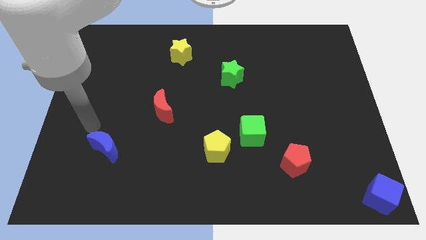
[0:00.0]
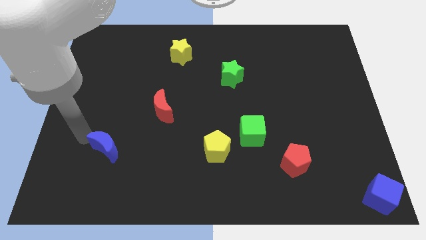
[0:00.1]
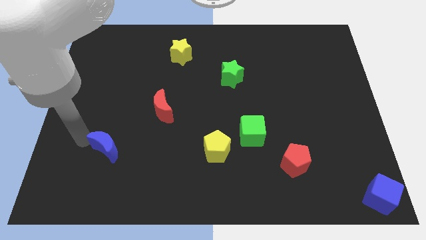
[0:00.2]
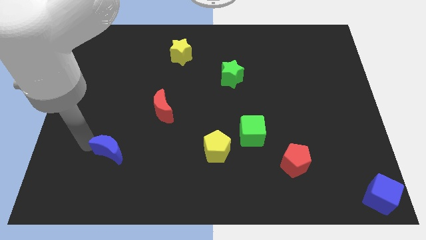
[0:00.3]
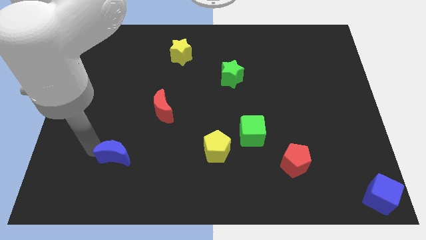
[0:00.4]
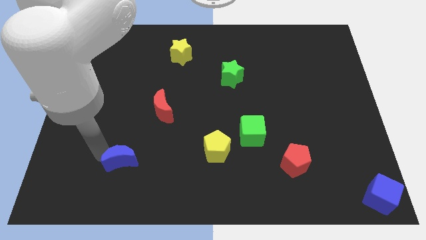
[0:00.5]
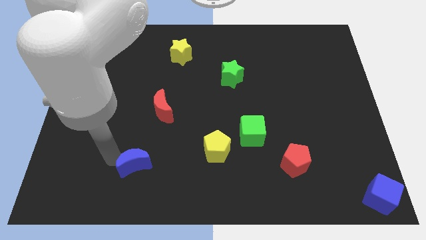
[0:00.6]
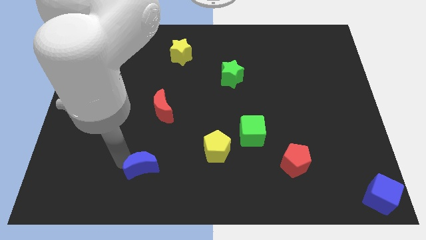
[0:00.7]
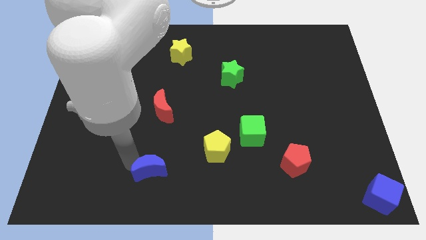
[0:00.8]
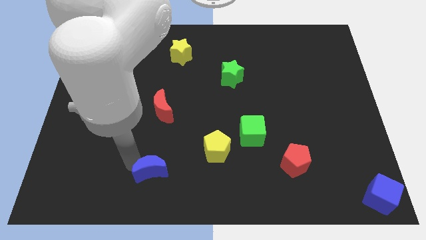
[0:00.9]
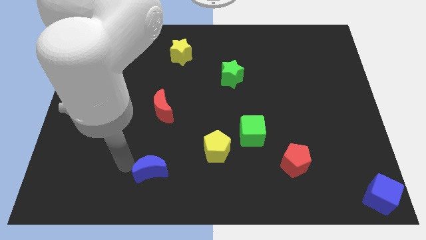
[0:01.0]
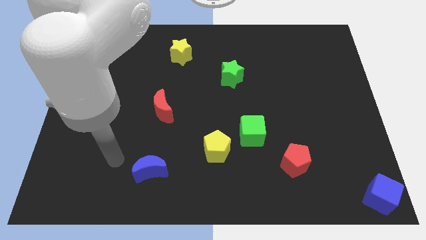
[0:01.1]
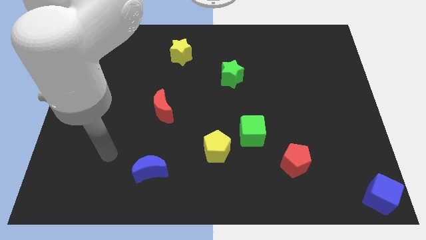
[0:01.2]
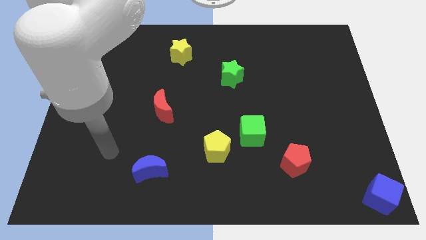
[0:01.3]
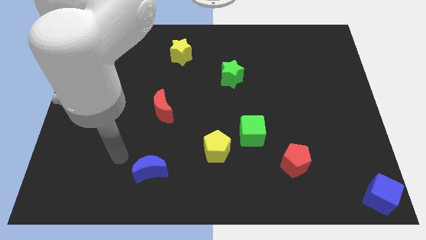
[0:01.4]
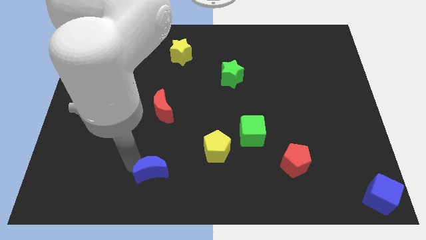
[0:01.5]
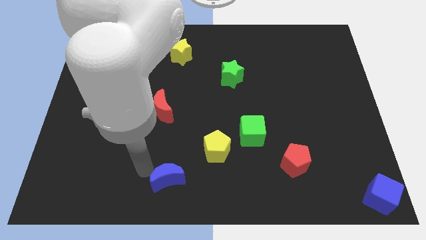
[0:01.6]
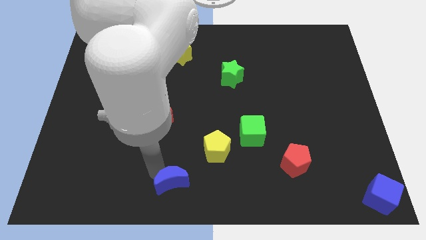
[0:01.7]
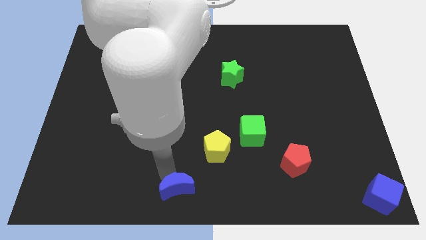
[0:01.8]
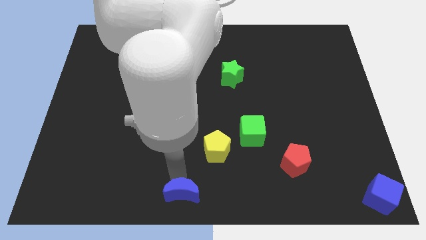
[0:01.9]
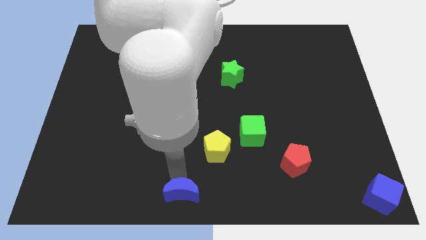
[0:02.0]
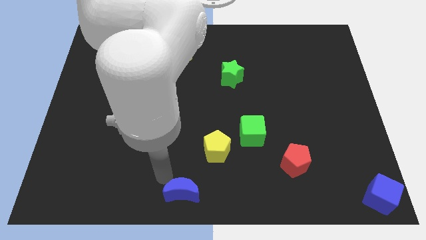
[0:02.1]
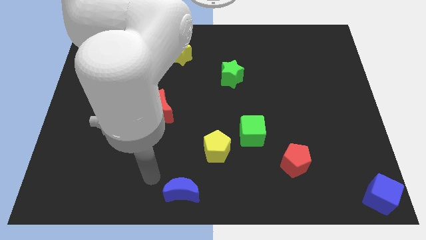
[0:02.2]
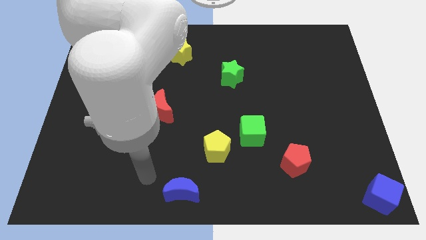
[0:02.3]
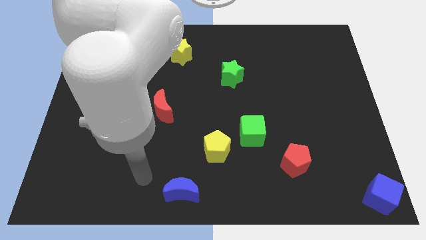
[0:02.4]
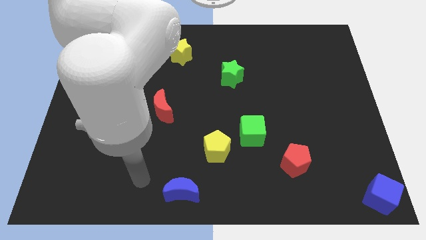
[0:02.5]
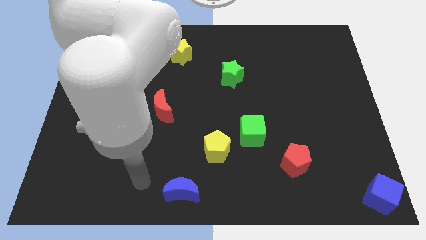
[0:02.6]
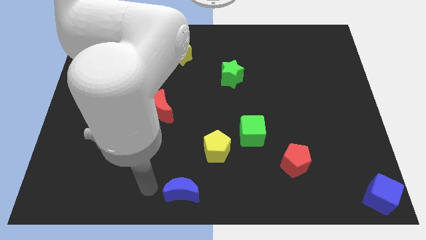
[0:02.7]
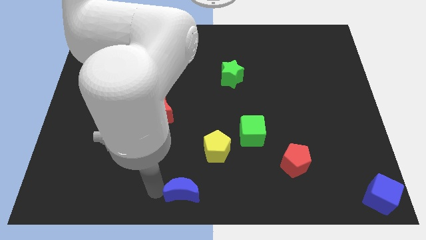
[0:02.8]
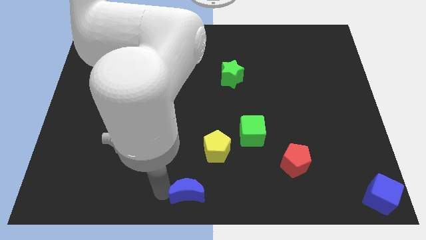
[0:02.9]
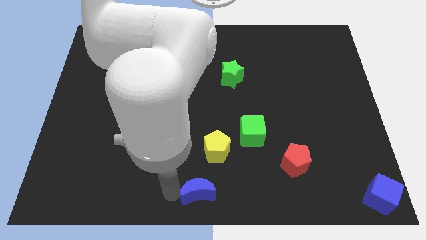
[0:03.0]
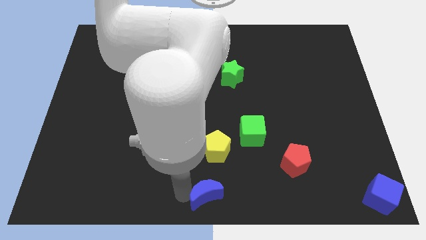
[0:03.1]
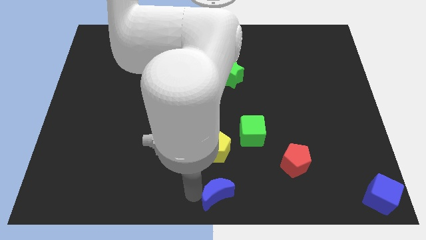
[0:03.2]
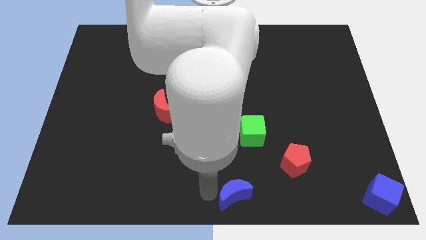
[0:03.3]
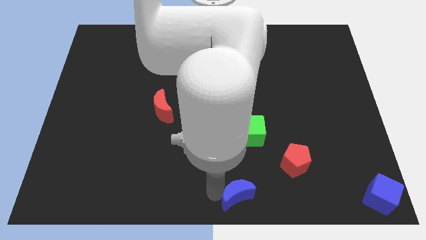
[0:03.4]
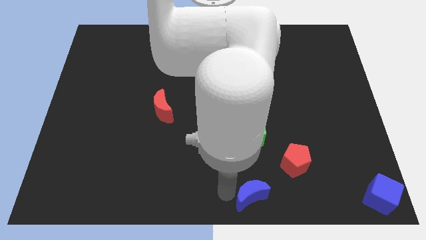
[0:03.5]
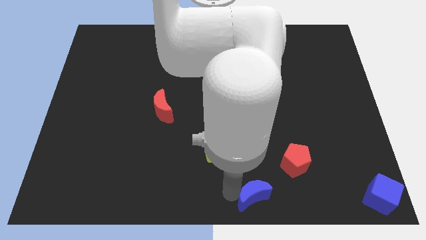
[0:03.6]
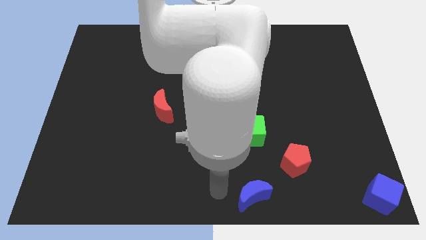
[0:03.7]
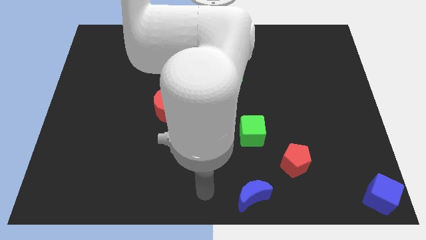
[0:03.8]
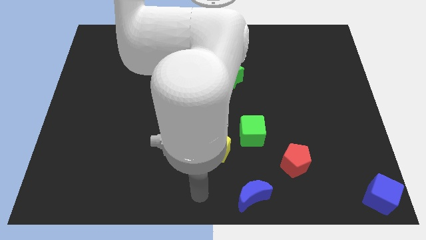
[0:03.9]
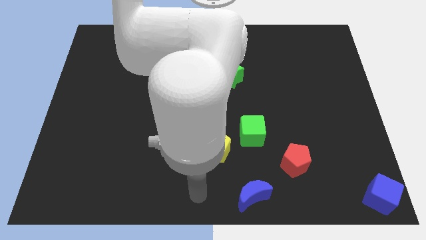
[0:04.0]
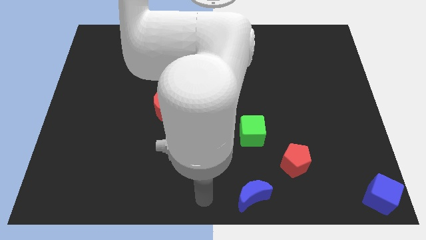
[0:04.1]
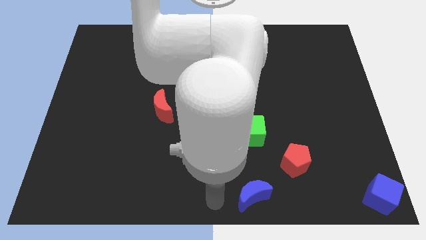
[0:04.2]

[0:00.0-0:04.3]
drag blue crescent towards bottom right side

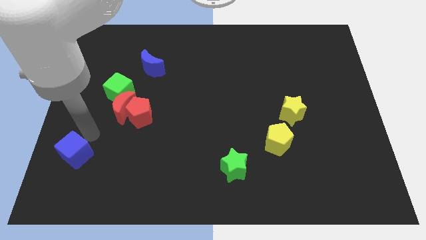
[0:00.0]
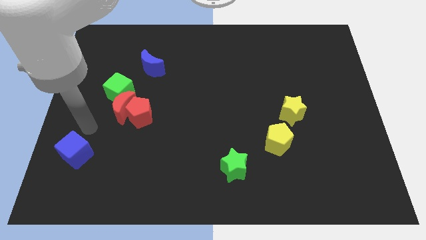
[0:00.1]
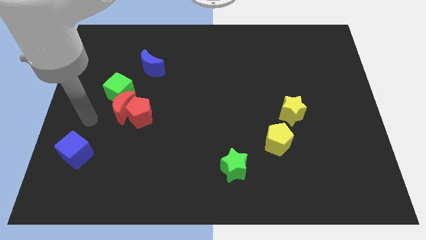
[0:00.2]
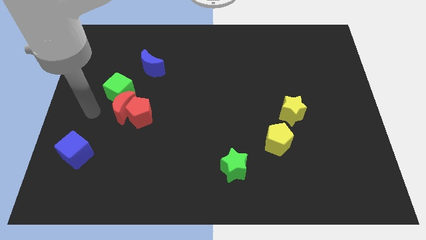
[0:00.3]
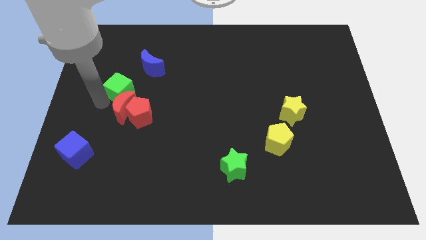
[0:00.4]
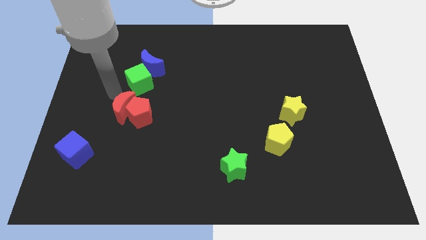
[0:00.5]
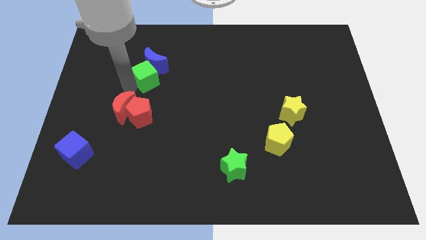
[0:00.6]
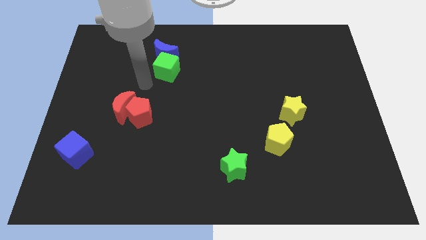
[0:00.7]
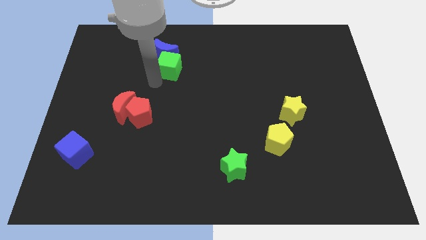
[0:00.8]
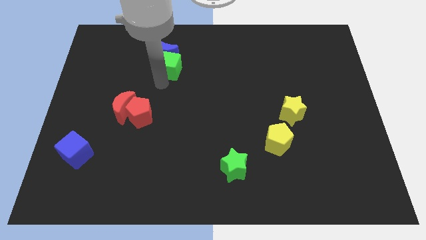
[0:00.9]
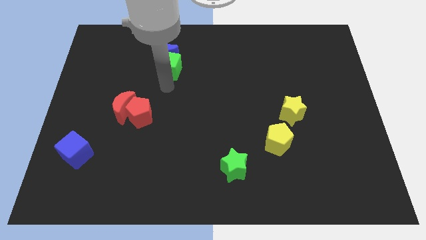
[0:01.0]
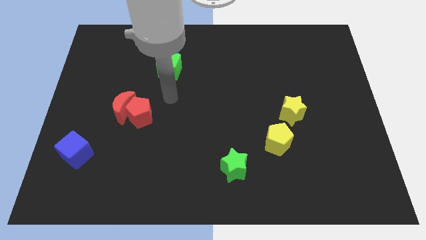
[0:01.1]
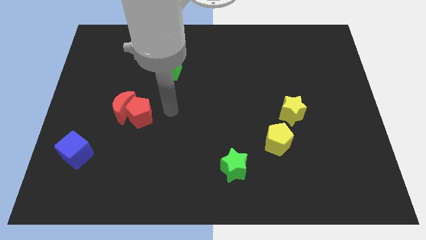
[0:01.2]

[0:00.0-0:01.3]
make the green cube to touch the blue crescent

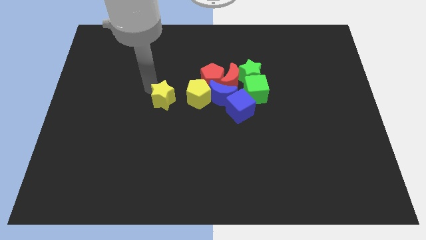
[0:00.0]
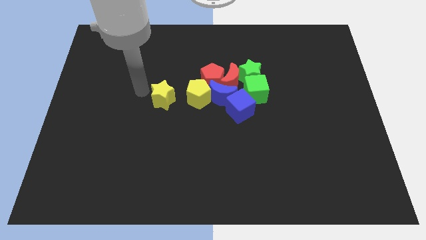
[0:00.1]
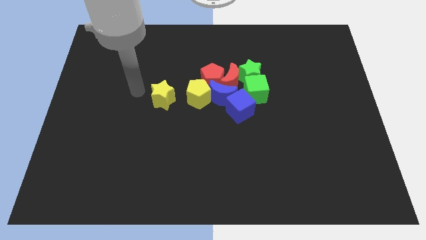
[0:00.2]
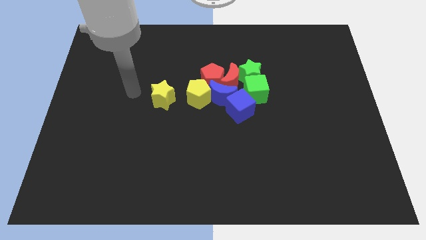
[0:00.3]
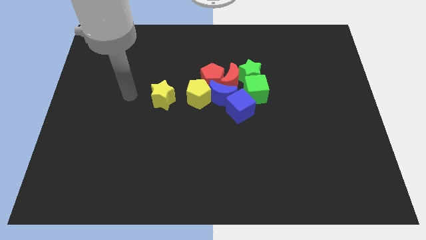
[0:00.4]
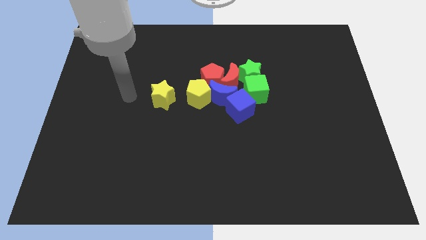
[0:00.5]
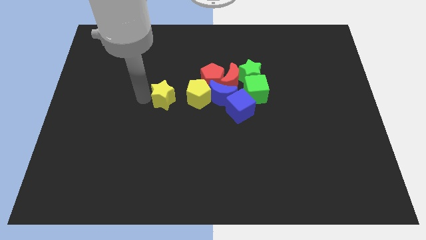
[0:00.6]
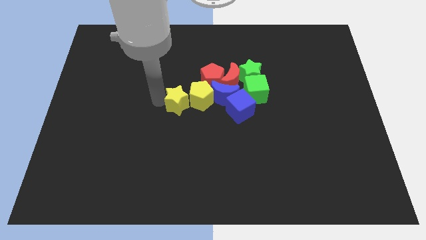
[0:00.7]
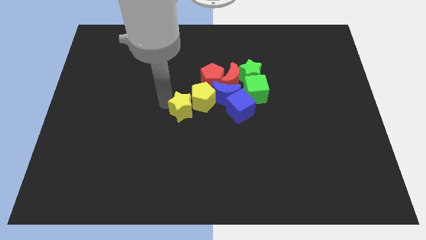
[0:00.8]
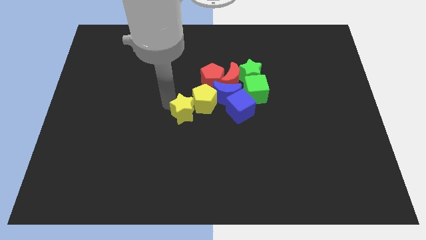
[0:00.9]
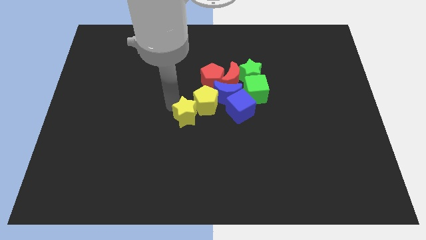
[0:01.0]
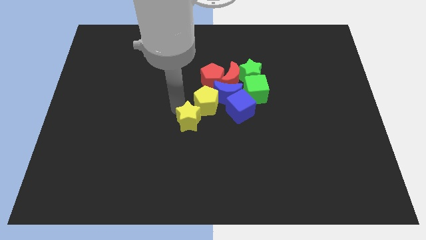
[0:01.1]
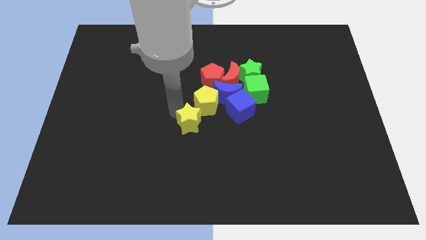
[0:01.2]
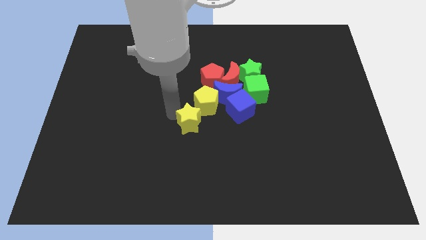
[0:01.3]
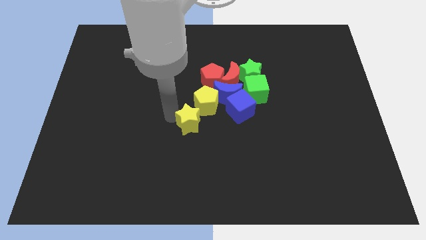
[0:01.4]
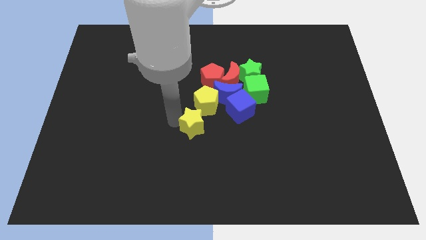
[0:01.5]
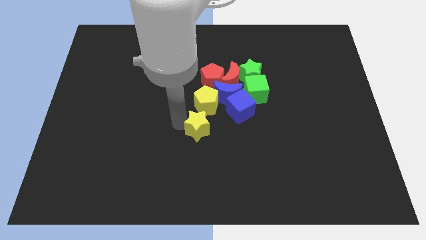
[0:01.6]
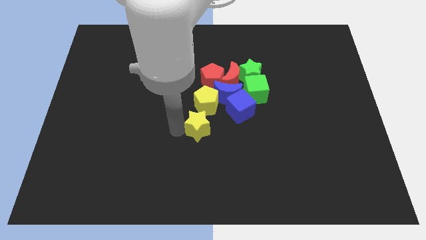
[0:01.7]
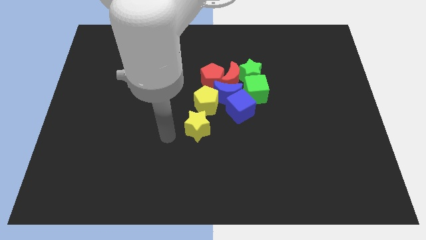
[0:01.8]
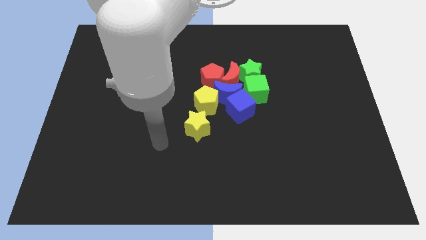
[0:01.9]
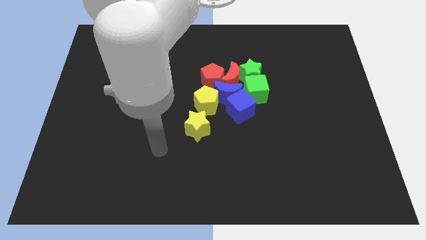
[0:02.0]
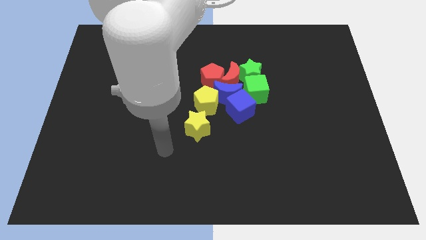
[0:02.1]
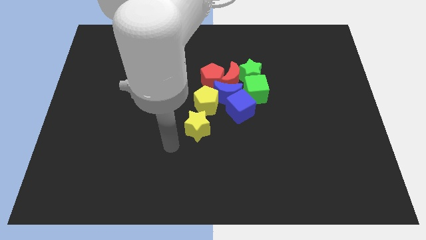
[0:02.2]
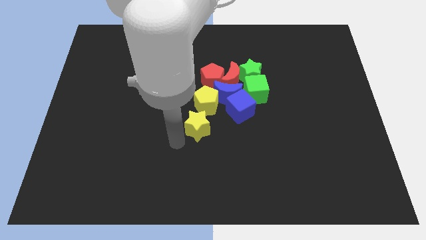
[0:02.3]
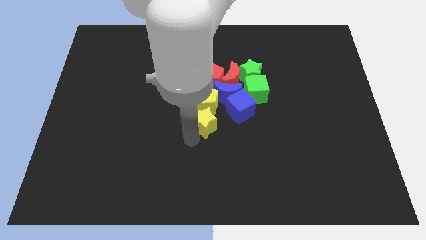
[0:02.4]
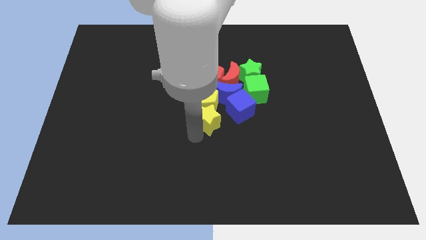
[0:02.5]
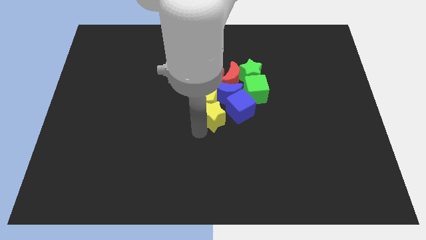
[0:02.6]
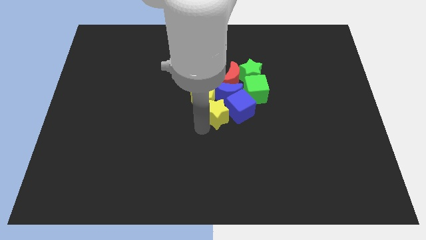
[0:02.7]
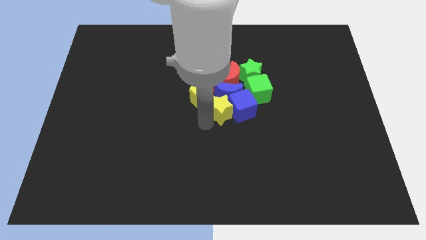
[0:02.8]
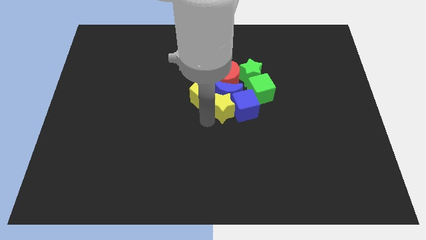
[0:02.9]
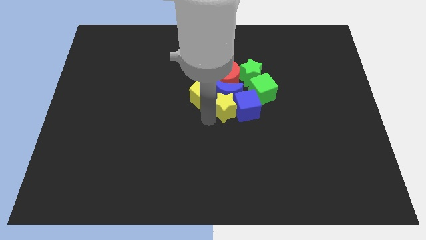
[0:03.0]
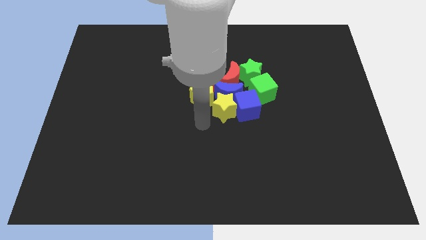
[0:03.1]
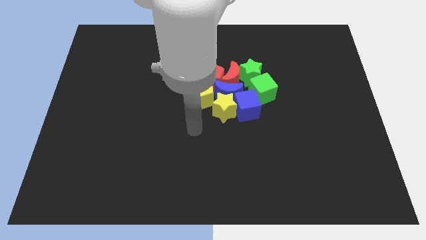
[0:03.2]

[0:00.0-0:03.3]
push yellow star in to blue cube
